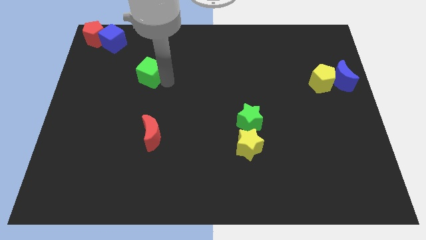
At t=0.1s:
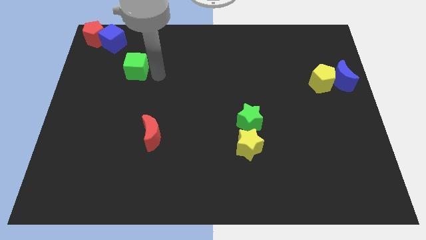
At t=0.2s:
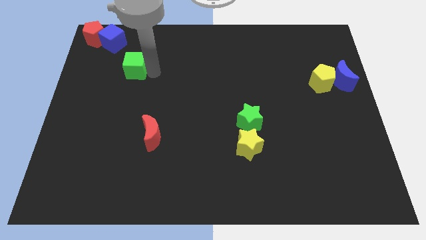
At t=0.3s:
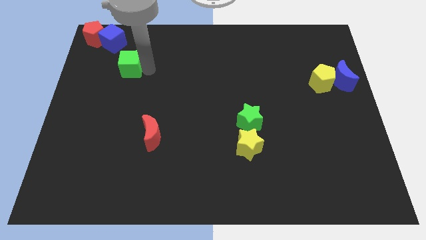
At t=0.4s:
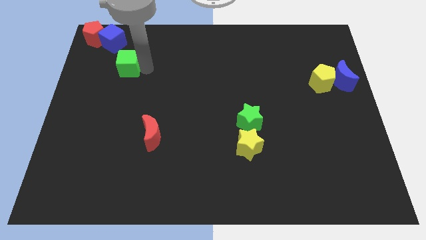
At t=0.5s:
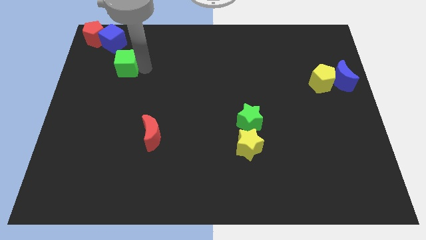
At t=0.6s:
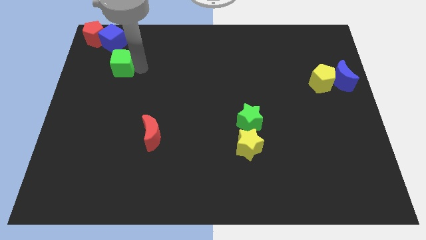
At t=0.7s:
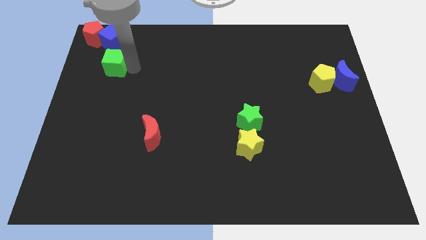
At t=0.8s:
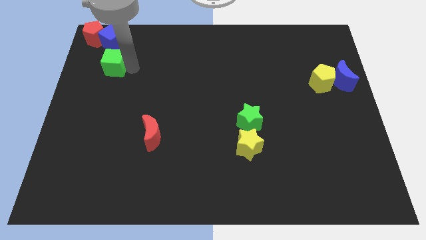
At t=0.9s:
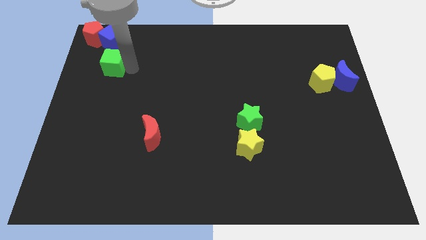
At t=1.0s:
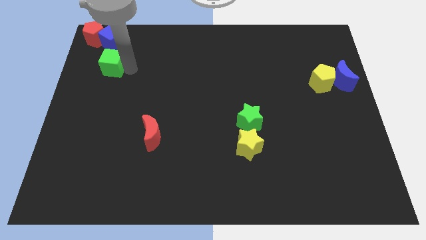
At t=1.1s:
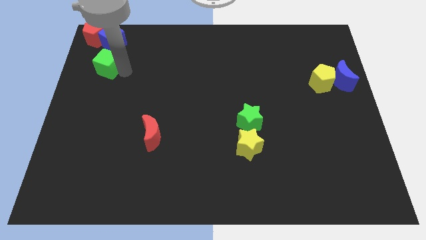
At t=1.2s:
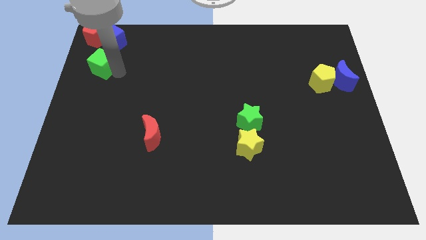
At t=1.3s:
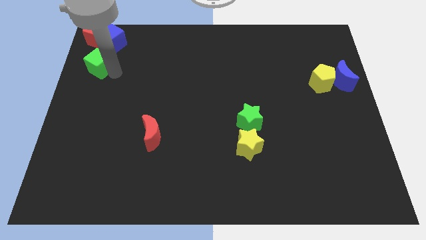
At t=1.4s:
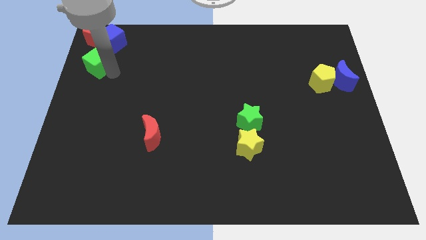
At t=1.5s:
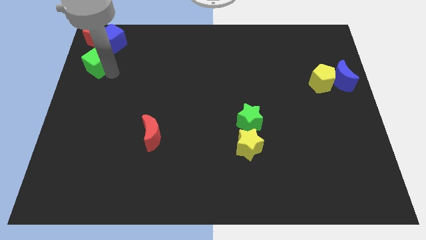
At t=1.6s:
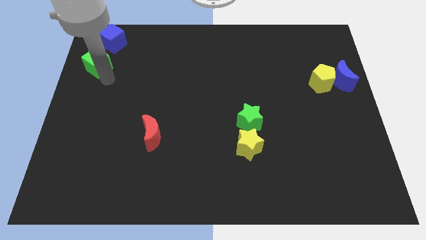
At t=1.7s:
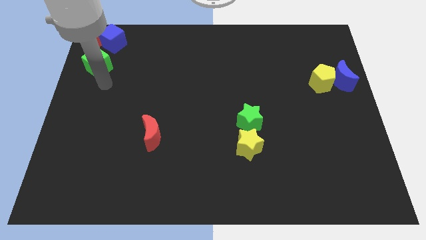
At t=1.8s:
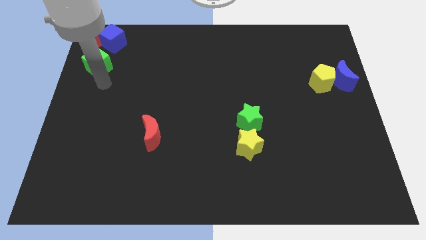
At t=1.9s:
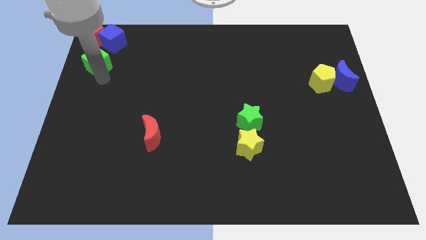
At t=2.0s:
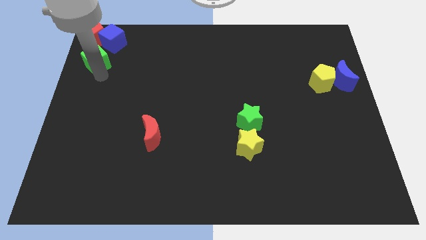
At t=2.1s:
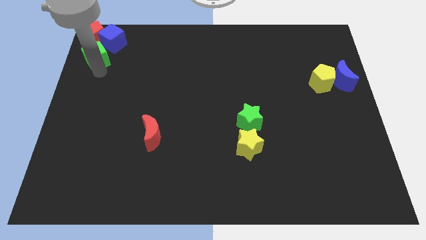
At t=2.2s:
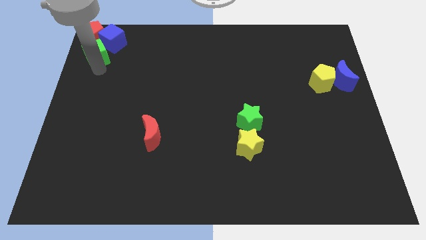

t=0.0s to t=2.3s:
push green cube close to the blue cube and red pentagon

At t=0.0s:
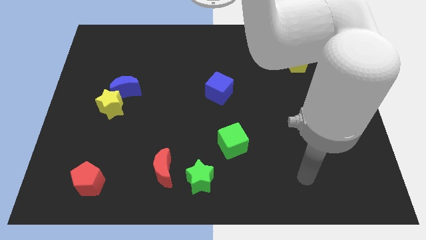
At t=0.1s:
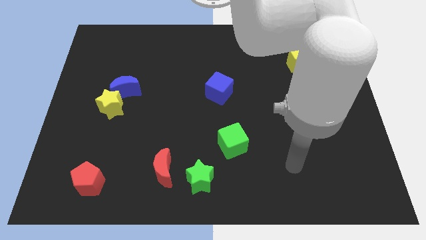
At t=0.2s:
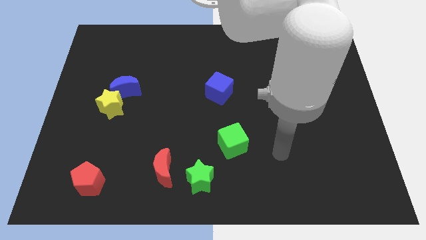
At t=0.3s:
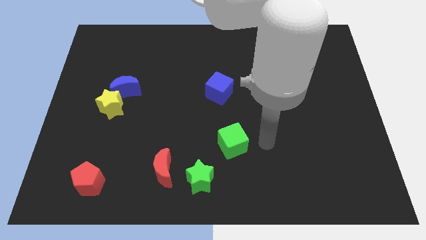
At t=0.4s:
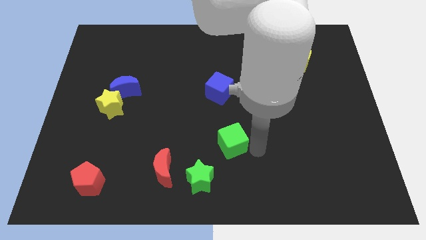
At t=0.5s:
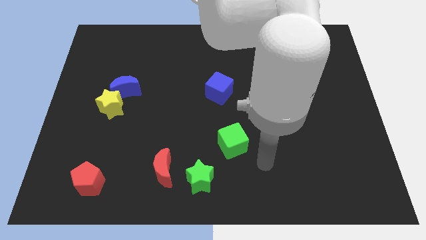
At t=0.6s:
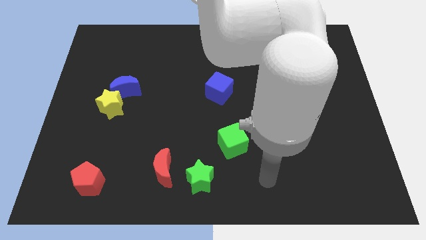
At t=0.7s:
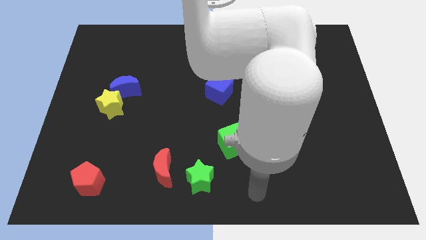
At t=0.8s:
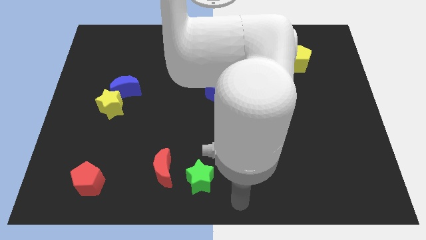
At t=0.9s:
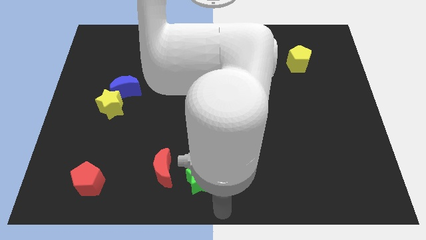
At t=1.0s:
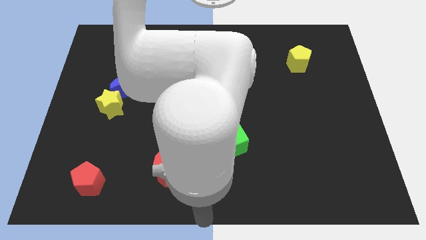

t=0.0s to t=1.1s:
move your arm below green star

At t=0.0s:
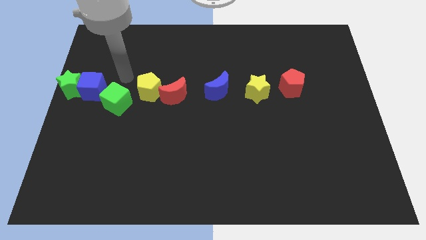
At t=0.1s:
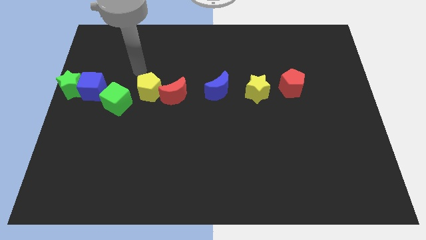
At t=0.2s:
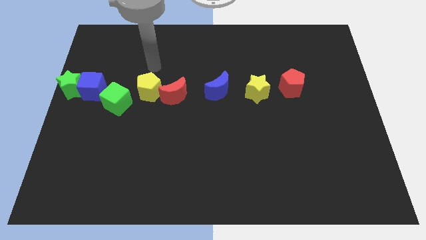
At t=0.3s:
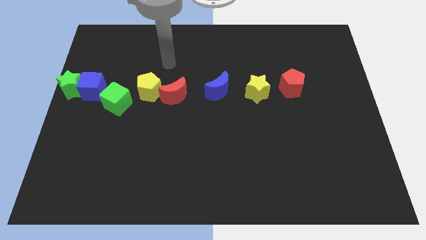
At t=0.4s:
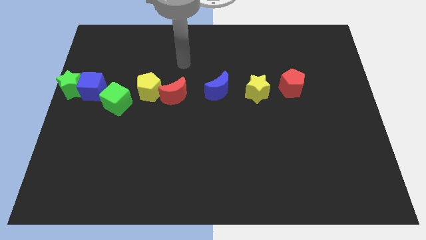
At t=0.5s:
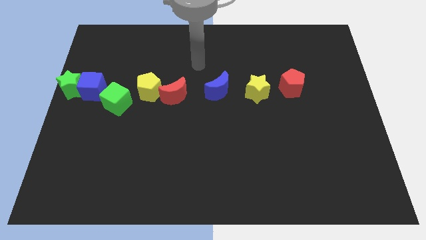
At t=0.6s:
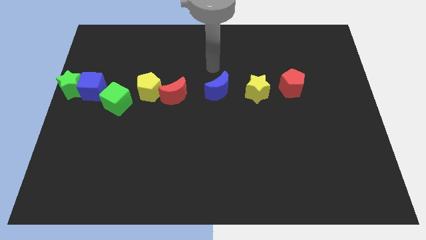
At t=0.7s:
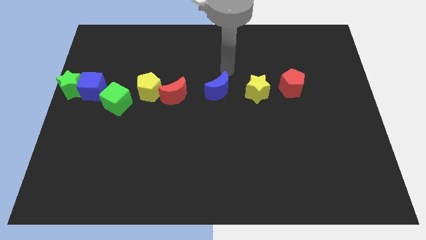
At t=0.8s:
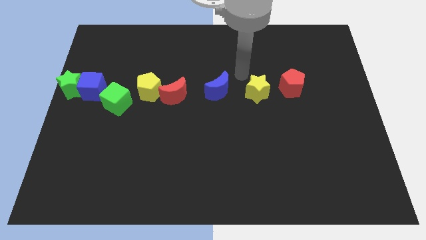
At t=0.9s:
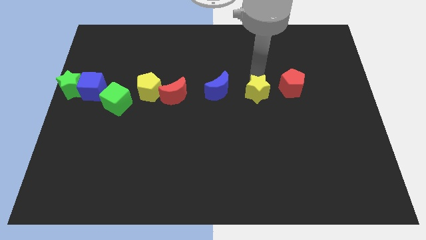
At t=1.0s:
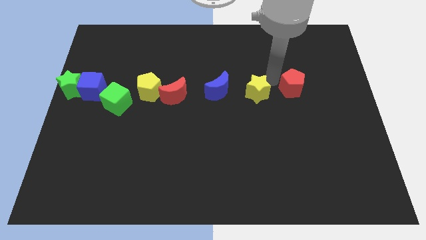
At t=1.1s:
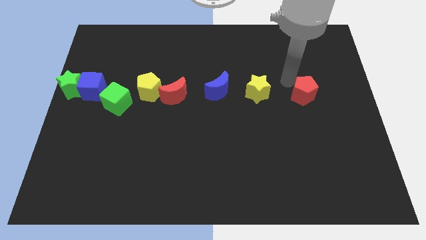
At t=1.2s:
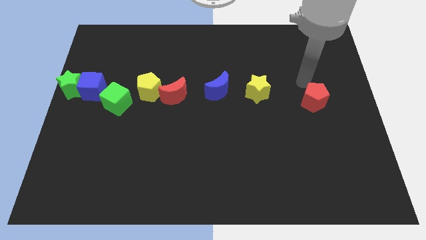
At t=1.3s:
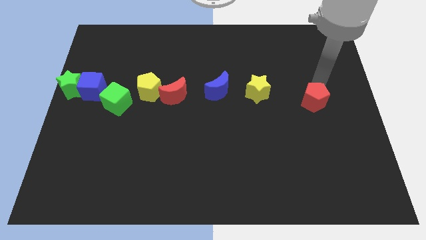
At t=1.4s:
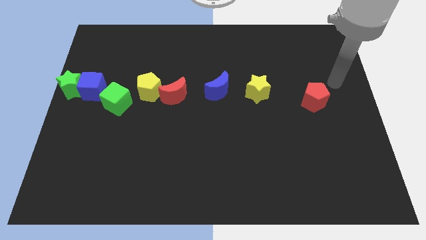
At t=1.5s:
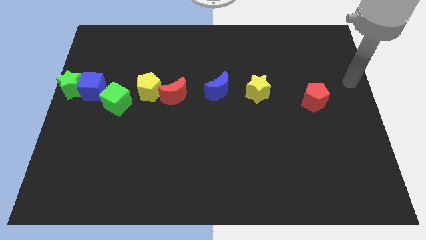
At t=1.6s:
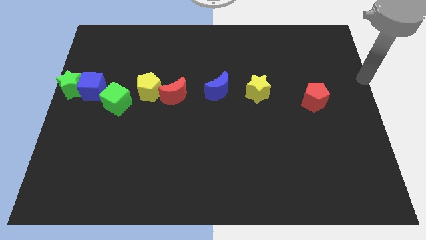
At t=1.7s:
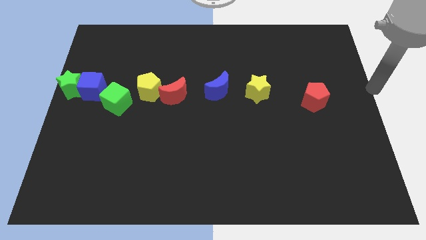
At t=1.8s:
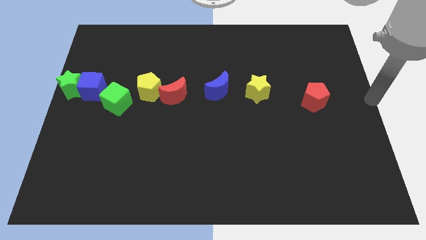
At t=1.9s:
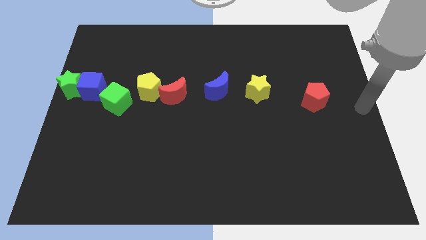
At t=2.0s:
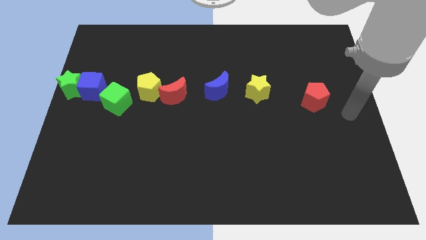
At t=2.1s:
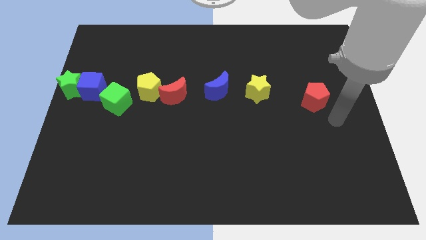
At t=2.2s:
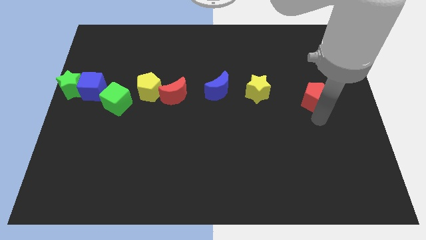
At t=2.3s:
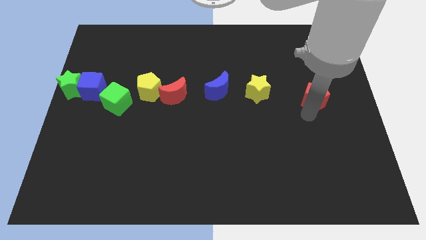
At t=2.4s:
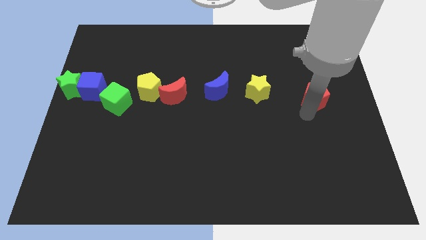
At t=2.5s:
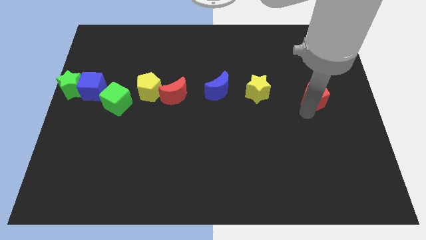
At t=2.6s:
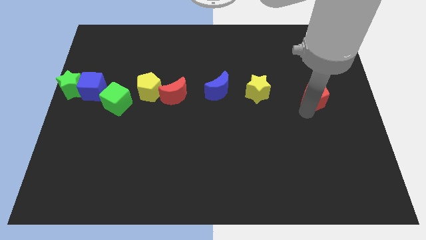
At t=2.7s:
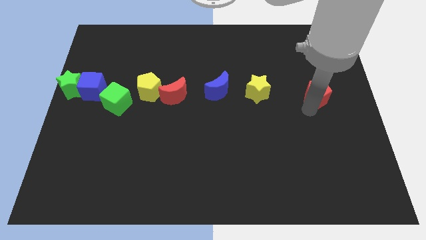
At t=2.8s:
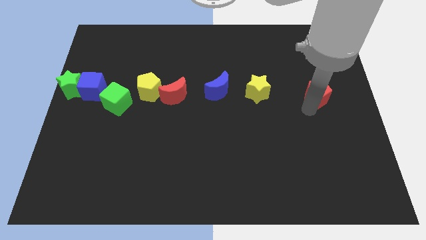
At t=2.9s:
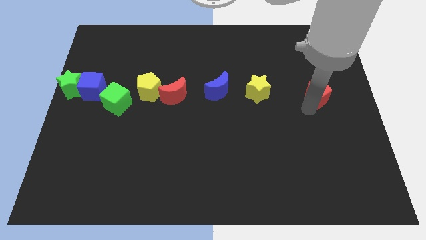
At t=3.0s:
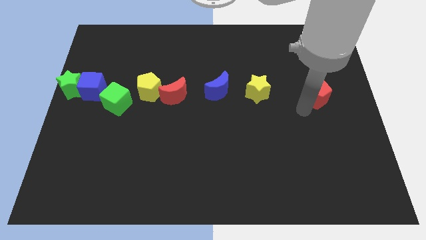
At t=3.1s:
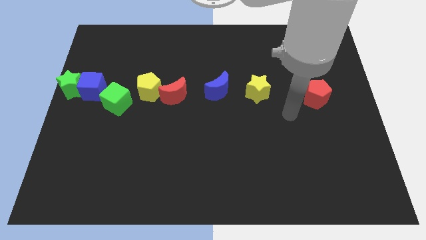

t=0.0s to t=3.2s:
move the red pentagon slightly away from the yellow star

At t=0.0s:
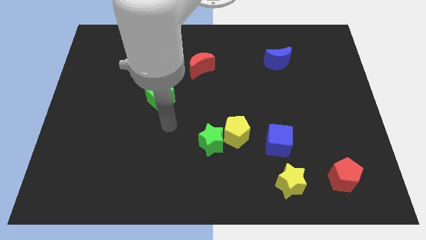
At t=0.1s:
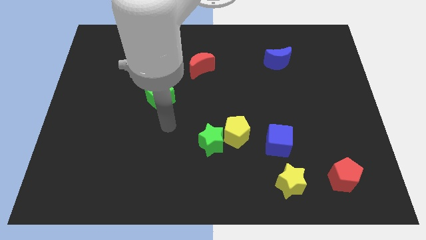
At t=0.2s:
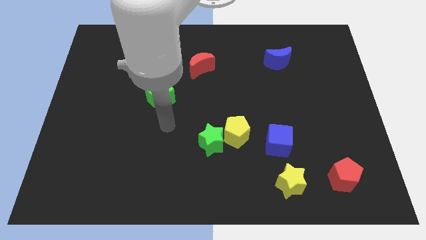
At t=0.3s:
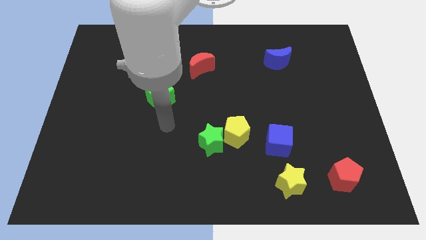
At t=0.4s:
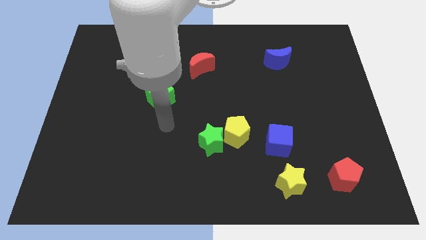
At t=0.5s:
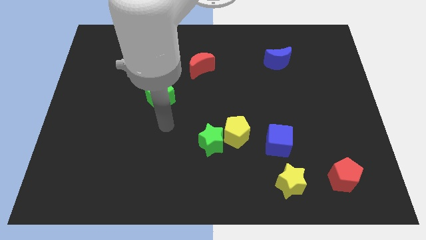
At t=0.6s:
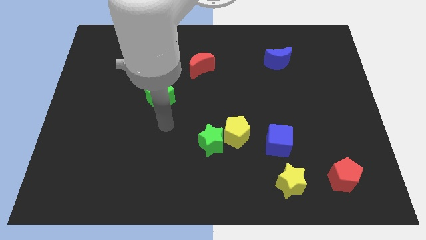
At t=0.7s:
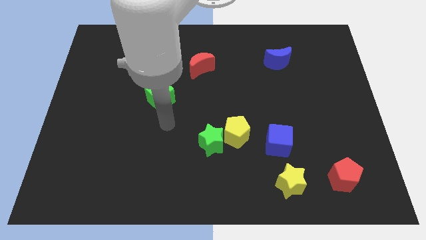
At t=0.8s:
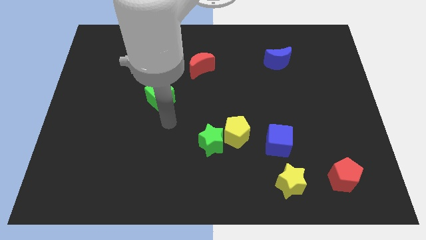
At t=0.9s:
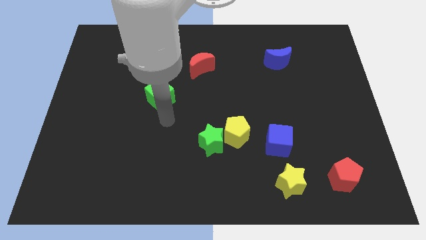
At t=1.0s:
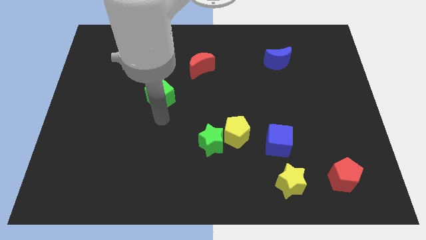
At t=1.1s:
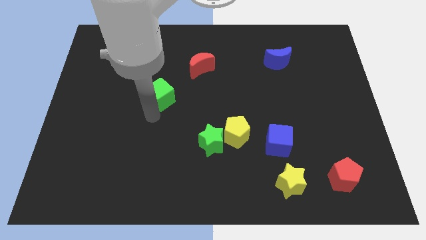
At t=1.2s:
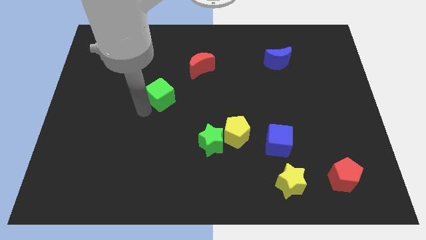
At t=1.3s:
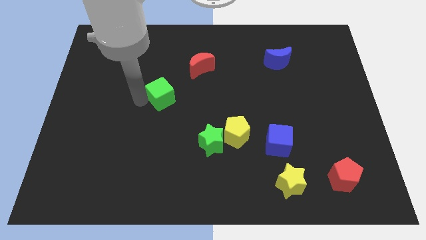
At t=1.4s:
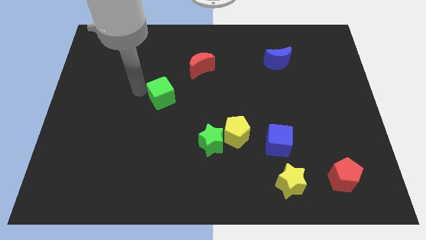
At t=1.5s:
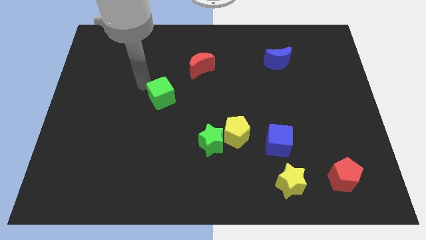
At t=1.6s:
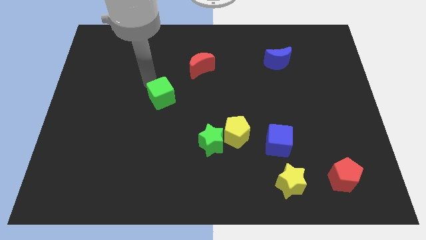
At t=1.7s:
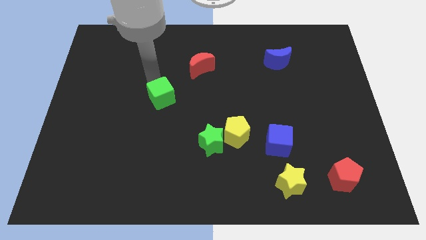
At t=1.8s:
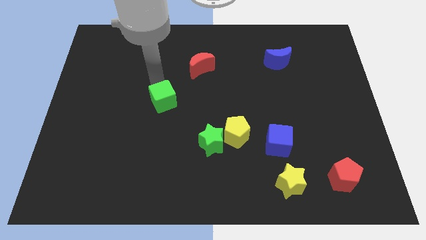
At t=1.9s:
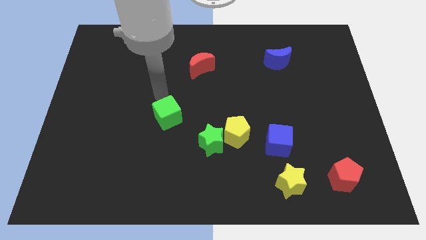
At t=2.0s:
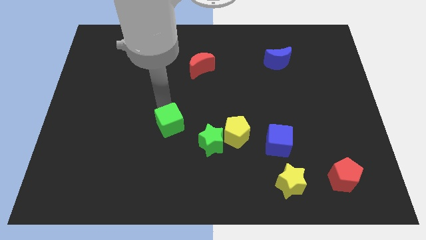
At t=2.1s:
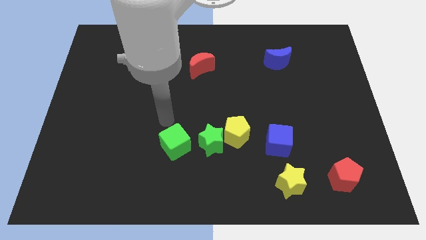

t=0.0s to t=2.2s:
place the green cube to the left of the green star
